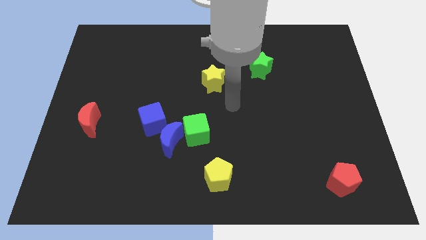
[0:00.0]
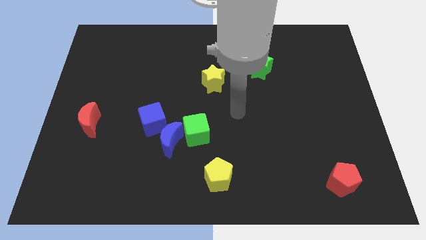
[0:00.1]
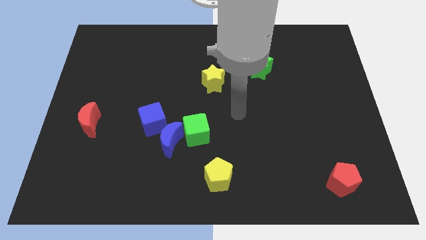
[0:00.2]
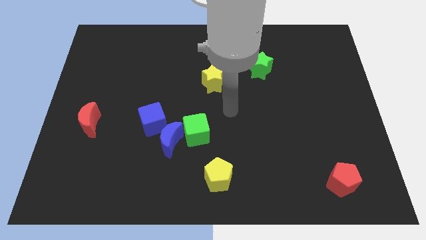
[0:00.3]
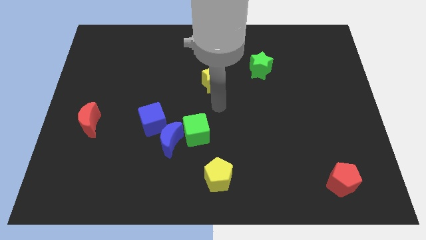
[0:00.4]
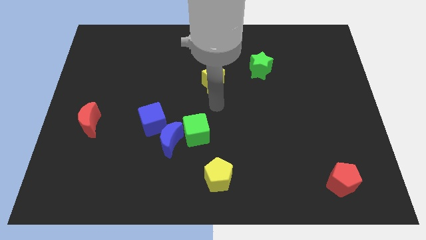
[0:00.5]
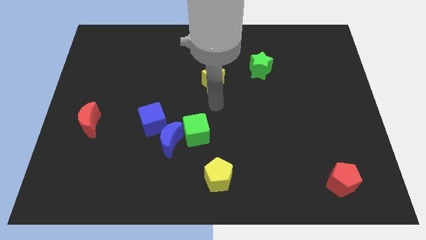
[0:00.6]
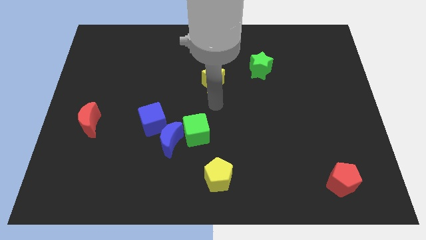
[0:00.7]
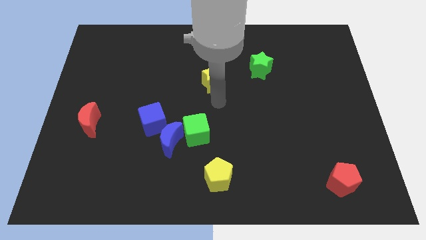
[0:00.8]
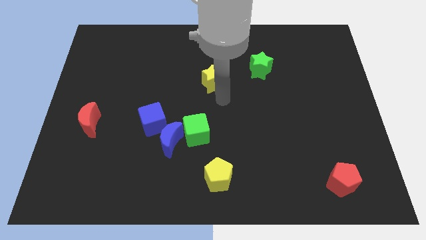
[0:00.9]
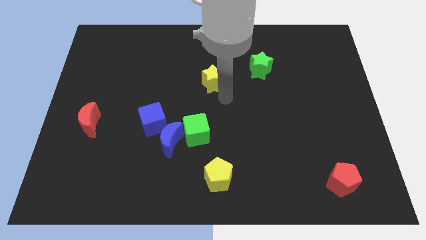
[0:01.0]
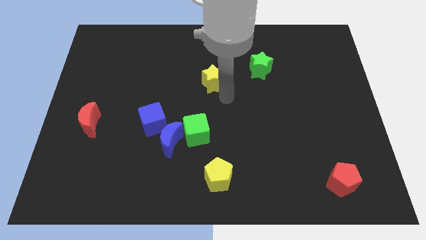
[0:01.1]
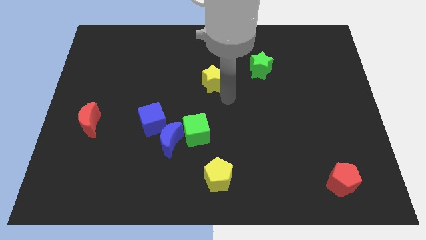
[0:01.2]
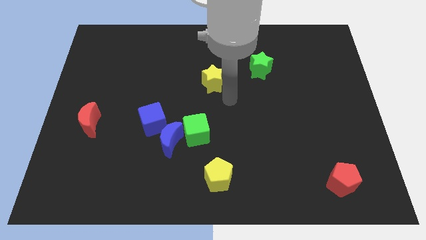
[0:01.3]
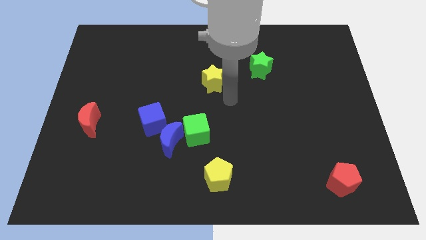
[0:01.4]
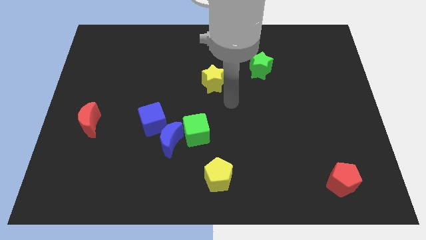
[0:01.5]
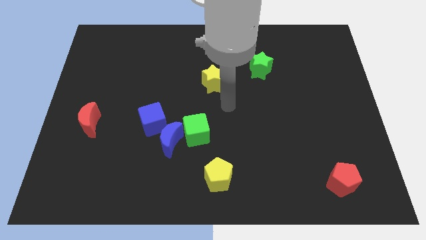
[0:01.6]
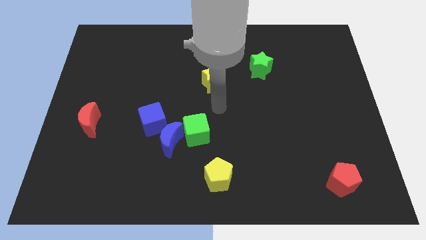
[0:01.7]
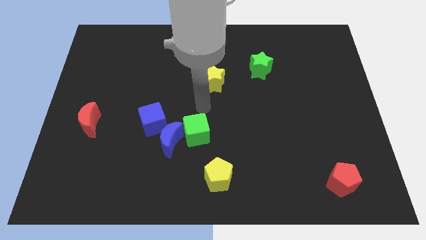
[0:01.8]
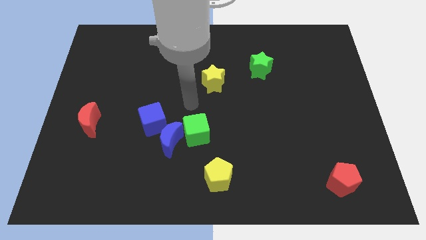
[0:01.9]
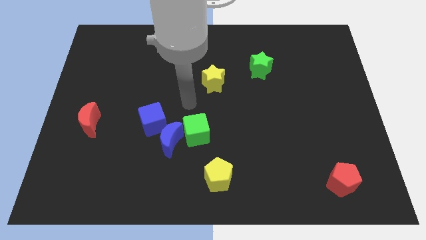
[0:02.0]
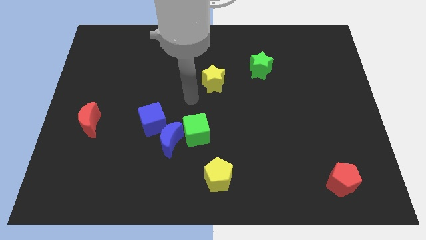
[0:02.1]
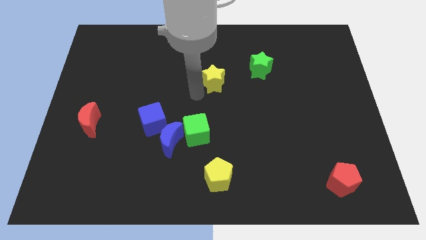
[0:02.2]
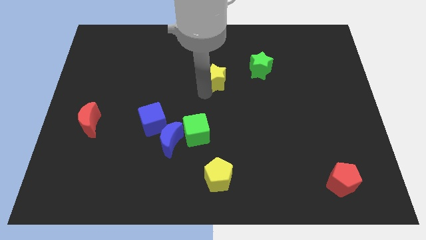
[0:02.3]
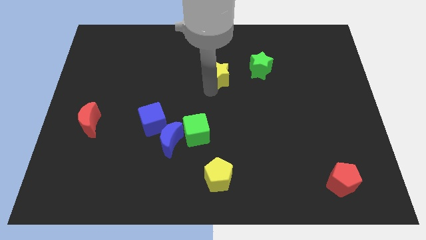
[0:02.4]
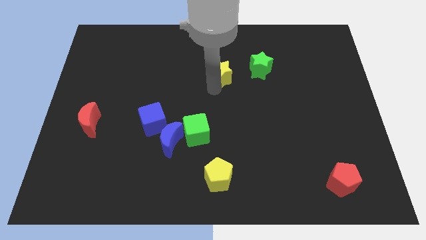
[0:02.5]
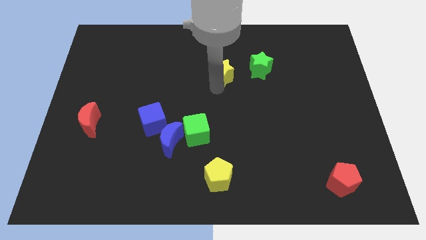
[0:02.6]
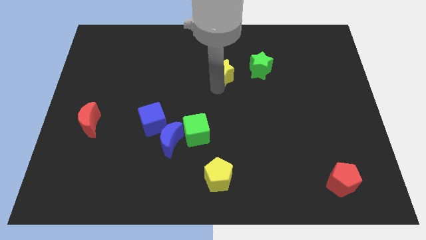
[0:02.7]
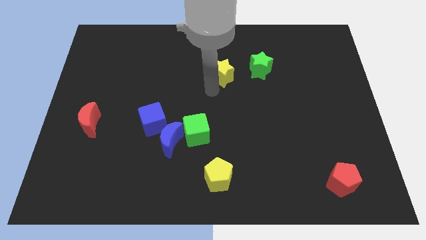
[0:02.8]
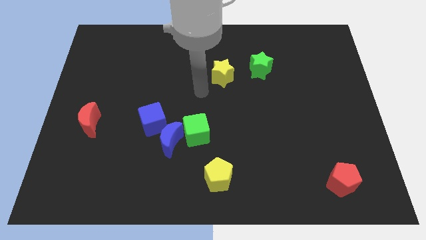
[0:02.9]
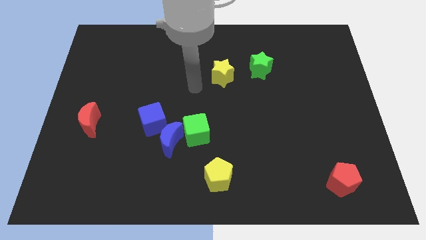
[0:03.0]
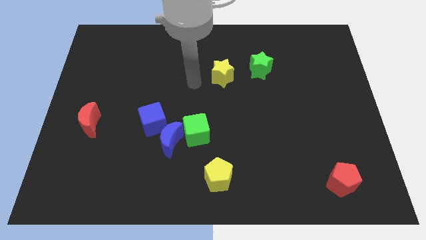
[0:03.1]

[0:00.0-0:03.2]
slightly push the yellow star towards the green star

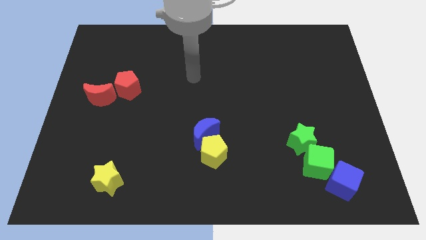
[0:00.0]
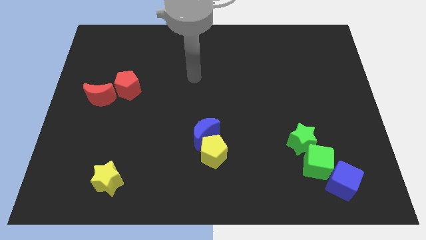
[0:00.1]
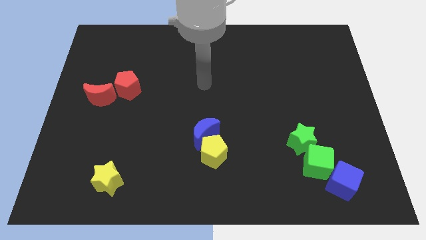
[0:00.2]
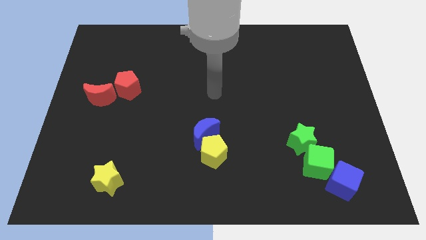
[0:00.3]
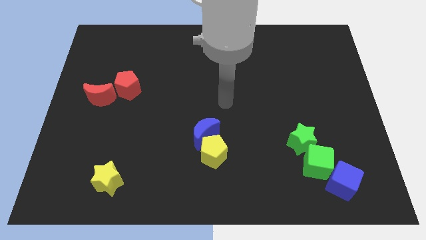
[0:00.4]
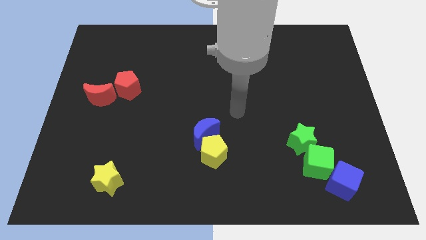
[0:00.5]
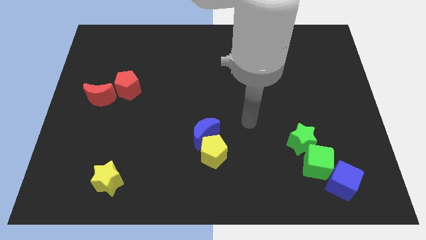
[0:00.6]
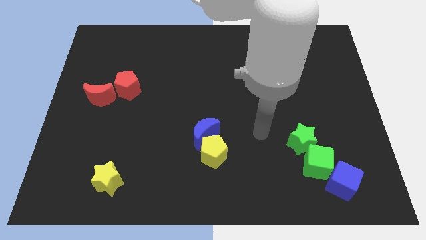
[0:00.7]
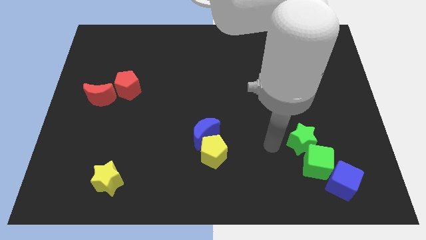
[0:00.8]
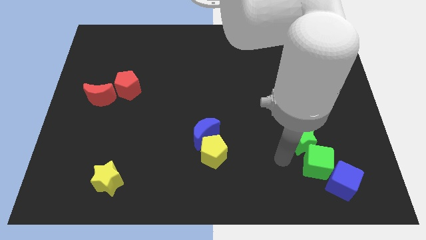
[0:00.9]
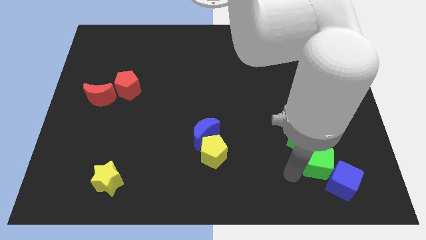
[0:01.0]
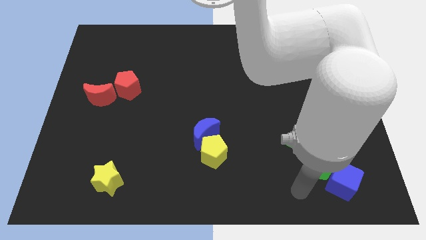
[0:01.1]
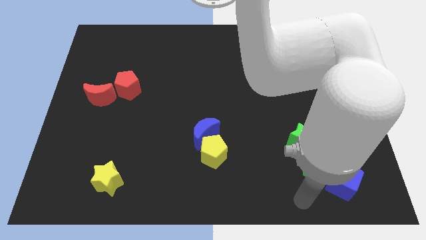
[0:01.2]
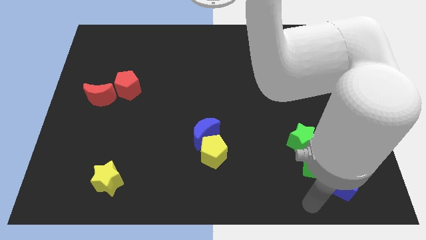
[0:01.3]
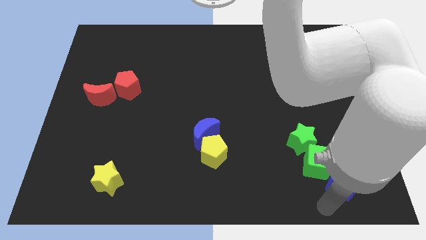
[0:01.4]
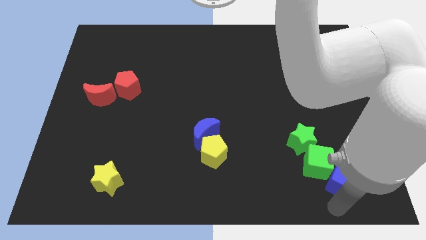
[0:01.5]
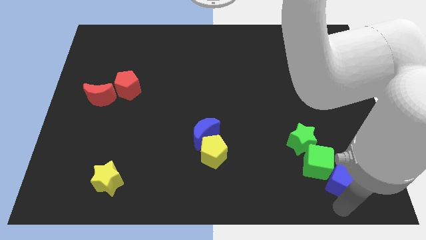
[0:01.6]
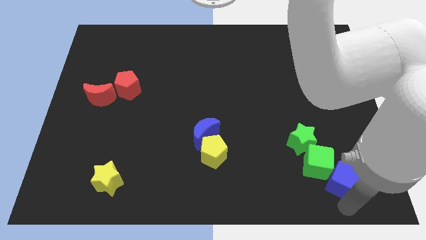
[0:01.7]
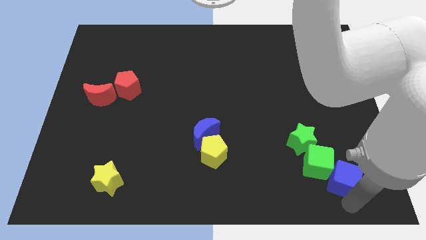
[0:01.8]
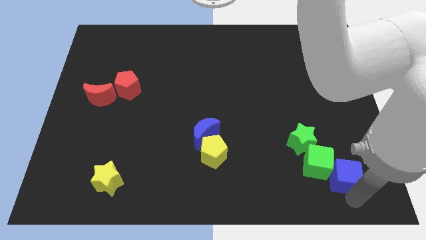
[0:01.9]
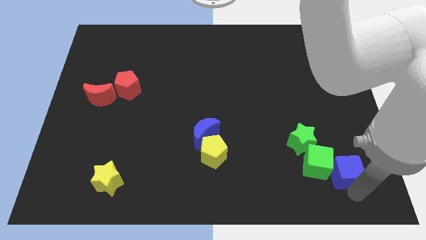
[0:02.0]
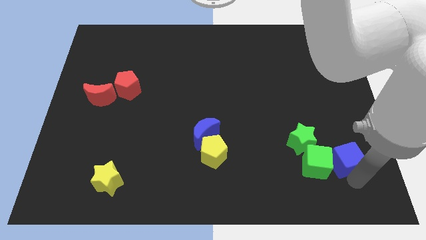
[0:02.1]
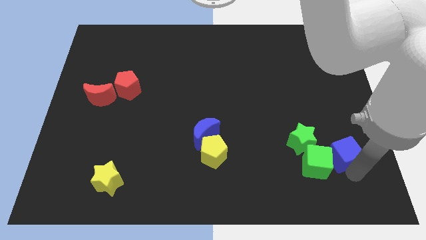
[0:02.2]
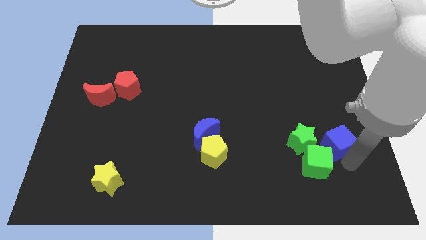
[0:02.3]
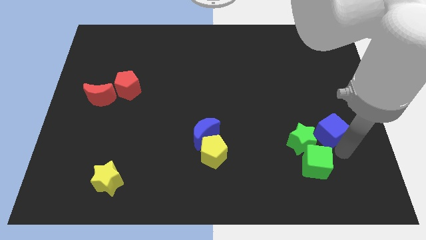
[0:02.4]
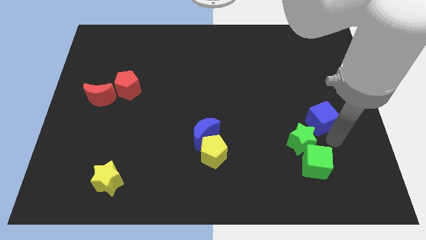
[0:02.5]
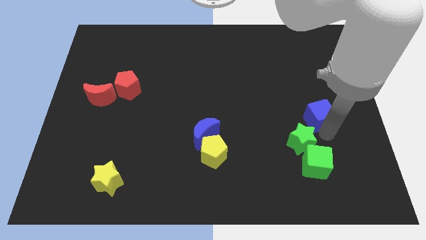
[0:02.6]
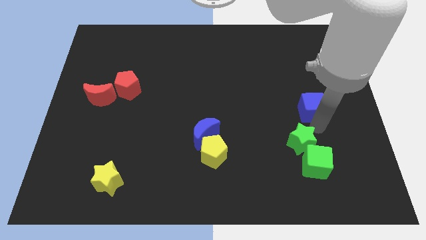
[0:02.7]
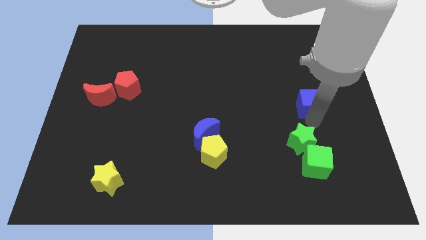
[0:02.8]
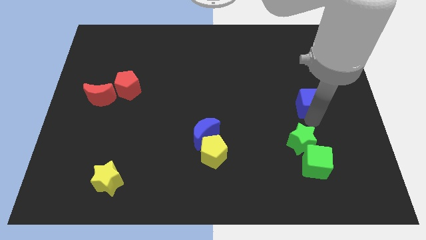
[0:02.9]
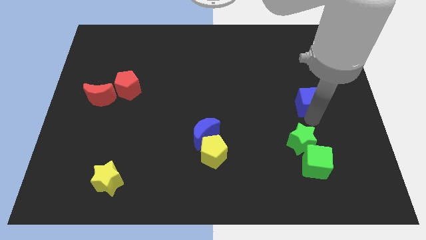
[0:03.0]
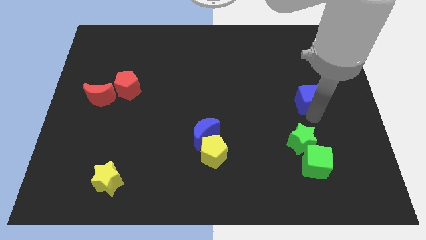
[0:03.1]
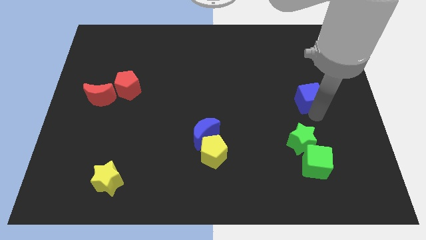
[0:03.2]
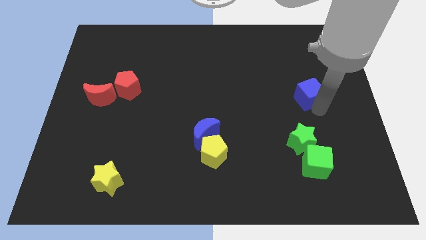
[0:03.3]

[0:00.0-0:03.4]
place the blue cube on the top of the green star

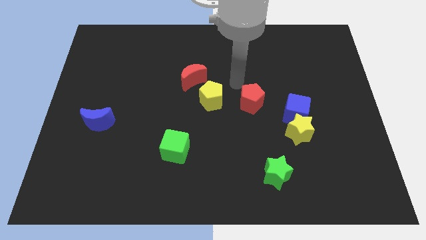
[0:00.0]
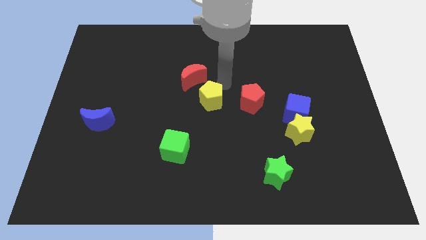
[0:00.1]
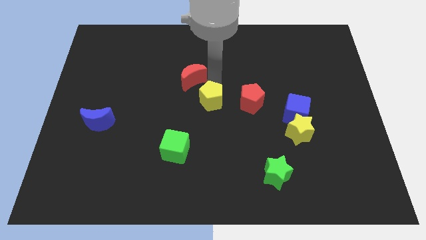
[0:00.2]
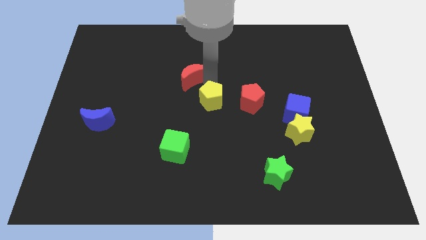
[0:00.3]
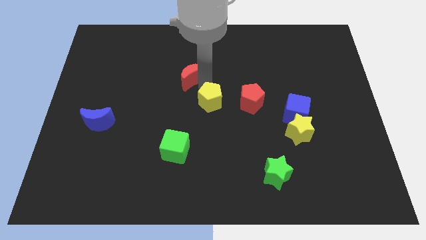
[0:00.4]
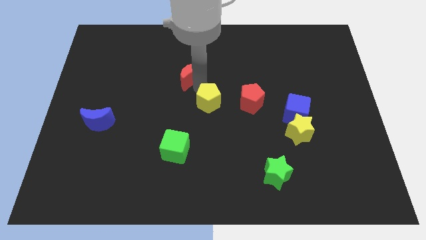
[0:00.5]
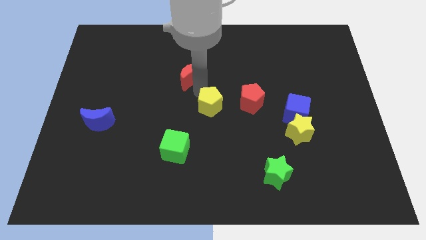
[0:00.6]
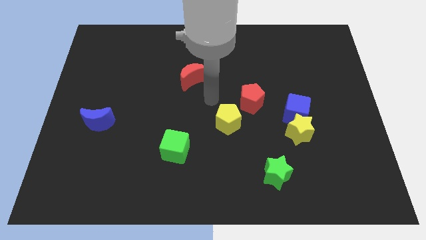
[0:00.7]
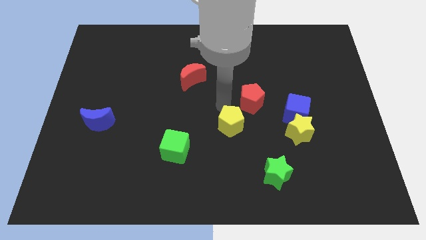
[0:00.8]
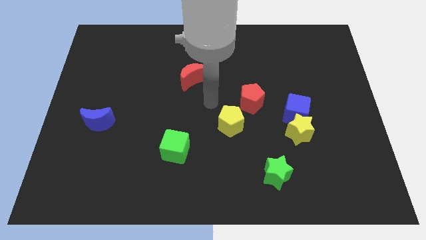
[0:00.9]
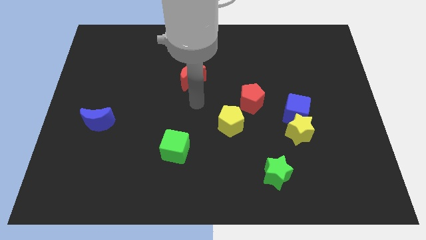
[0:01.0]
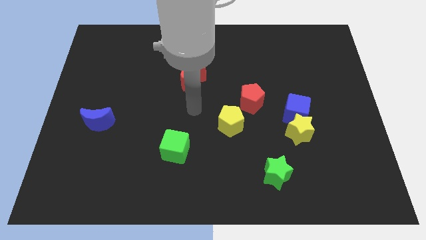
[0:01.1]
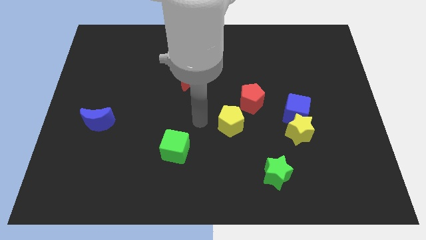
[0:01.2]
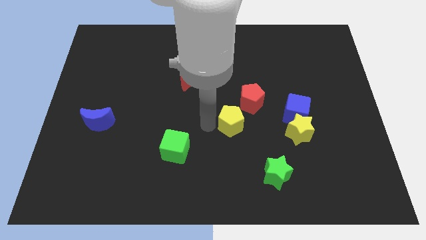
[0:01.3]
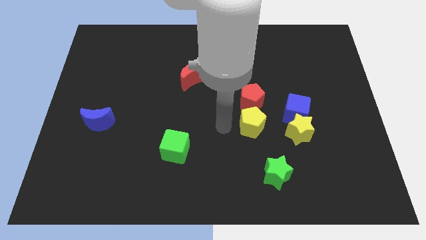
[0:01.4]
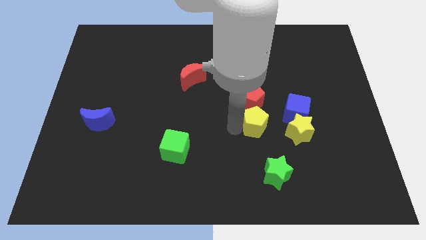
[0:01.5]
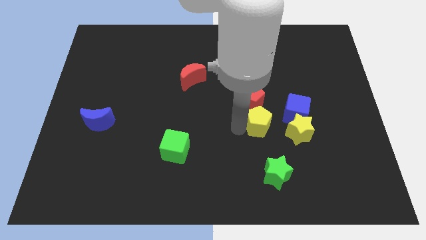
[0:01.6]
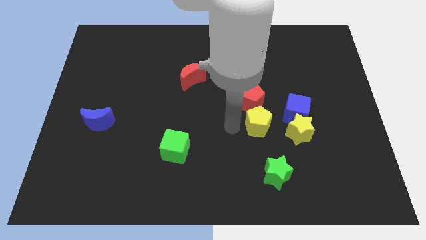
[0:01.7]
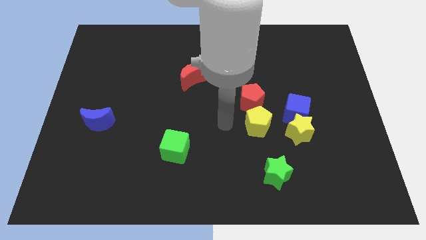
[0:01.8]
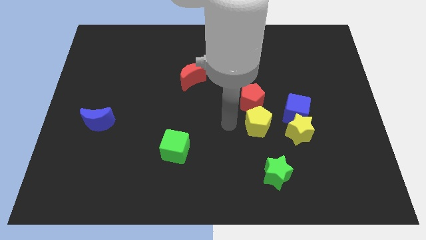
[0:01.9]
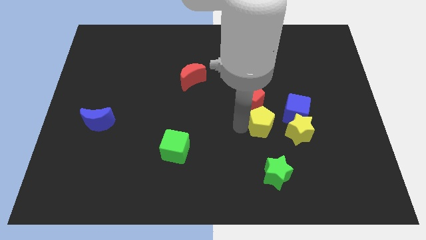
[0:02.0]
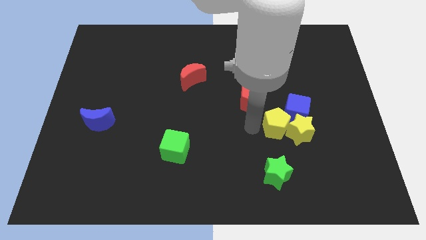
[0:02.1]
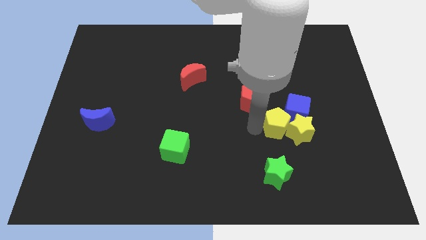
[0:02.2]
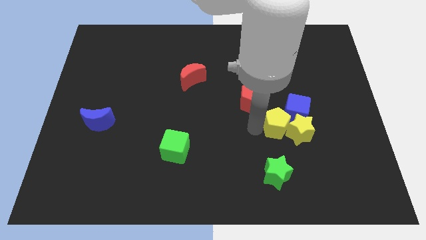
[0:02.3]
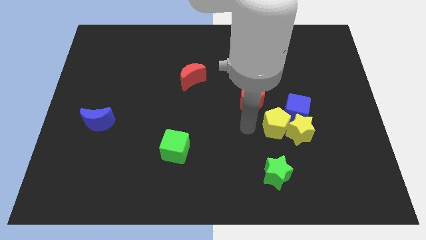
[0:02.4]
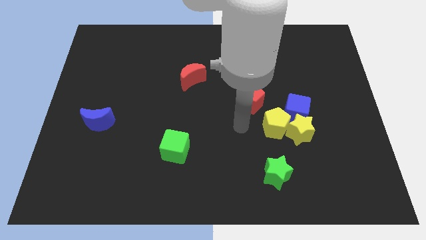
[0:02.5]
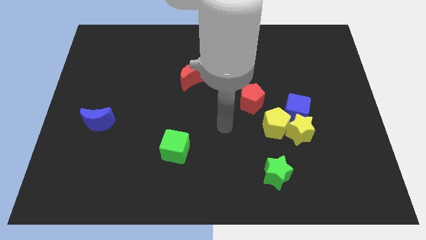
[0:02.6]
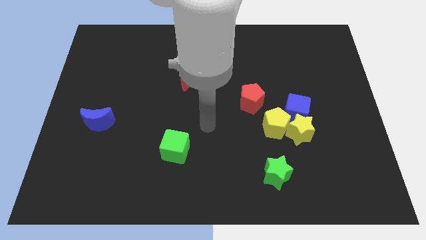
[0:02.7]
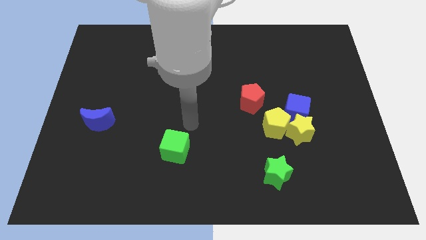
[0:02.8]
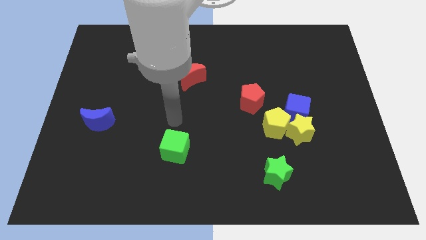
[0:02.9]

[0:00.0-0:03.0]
move the yellow pentagon into the yellow star
